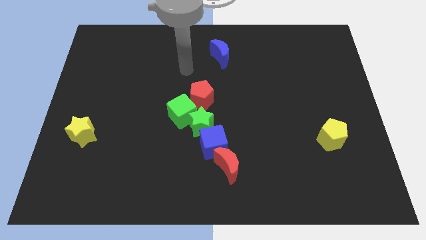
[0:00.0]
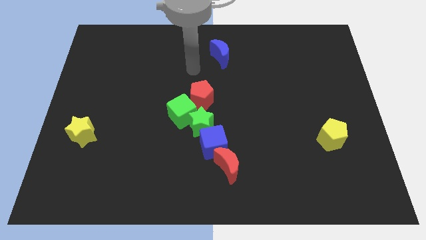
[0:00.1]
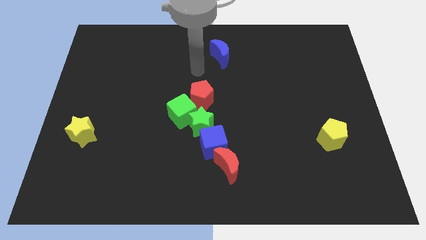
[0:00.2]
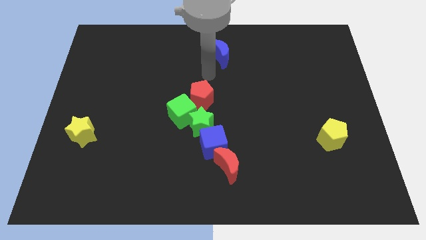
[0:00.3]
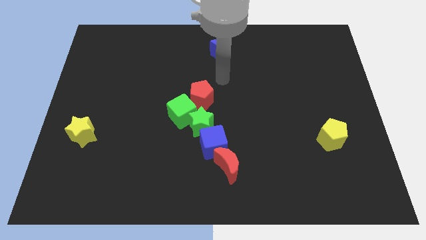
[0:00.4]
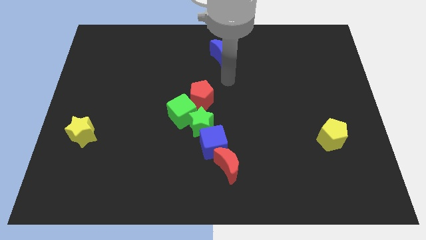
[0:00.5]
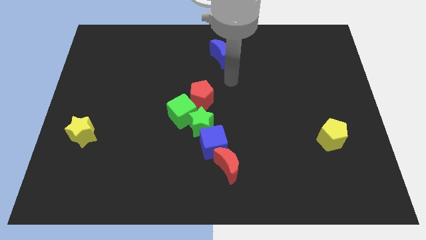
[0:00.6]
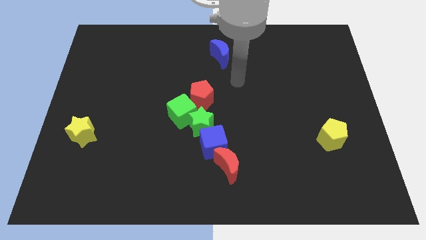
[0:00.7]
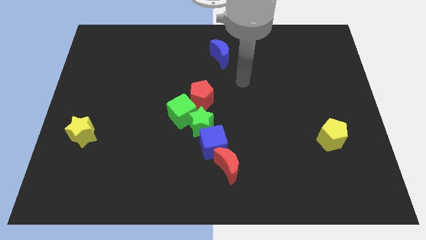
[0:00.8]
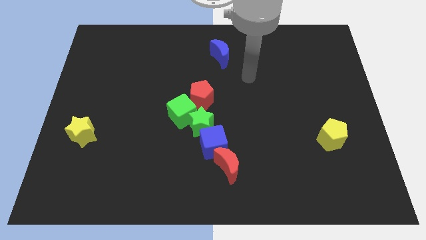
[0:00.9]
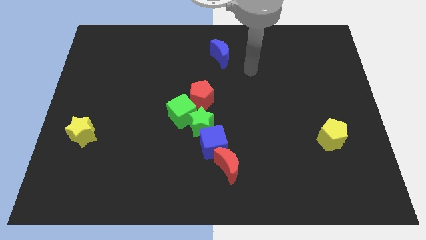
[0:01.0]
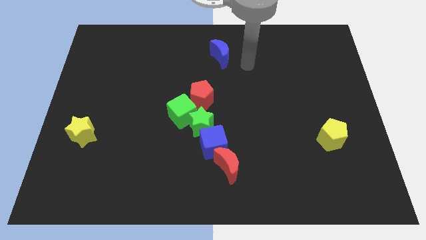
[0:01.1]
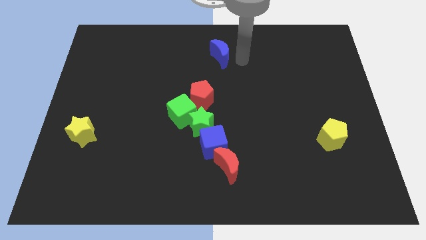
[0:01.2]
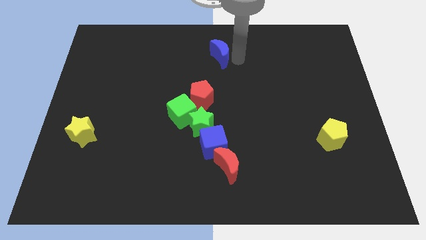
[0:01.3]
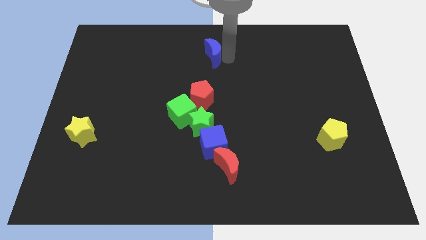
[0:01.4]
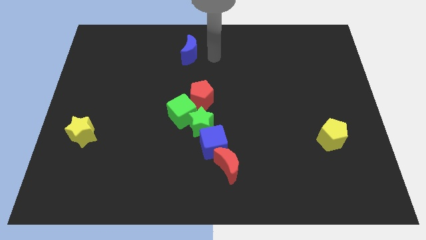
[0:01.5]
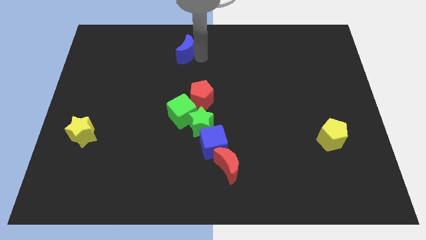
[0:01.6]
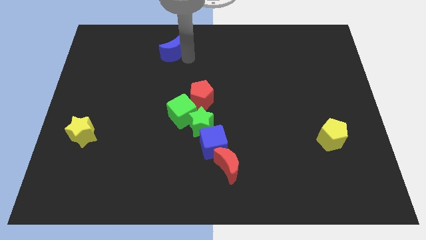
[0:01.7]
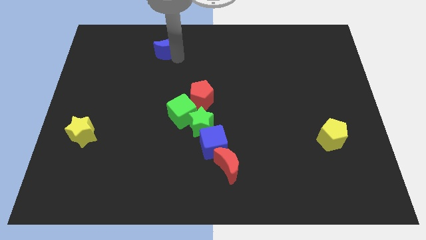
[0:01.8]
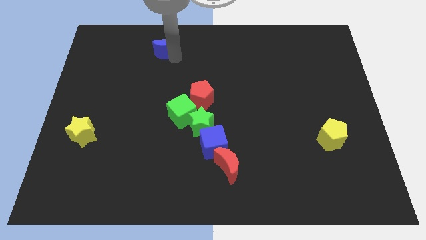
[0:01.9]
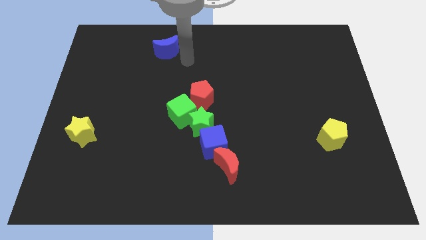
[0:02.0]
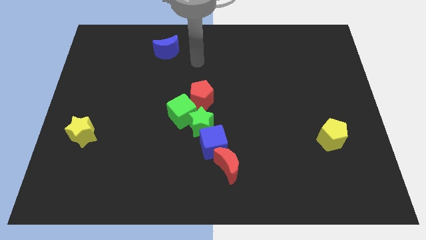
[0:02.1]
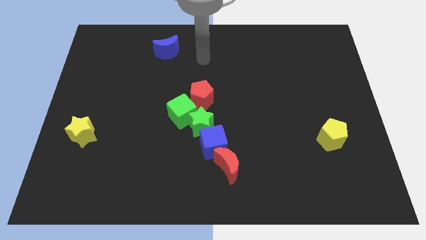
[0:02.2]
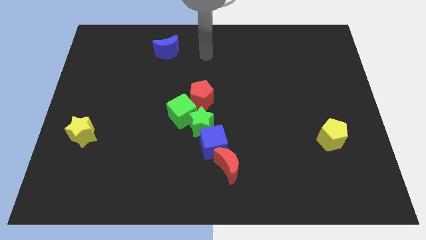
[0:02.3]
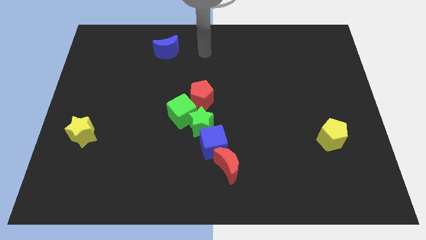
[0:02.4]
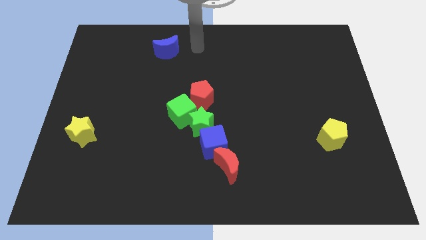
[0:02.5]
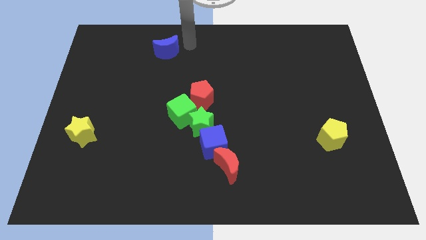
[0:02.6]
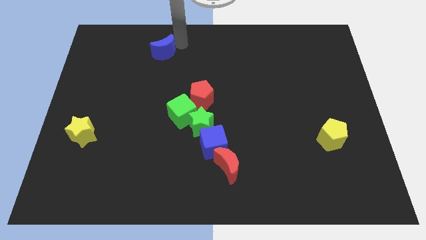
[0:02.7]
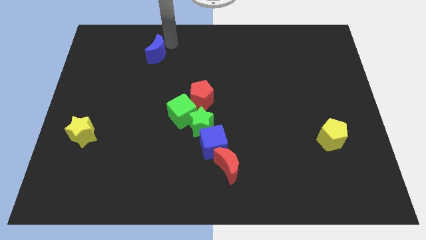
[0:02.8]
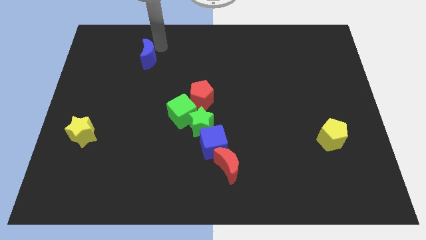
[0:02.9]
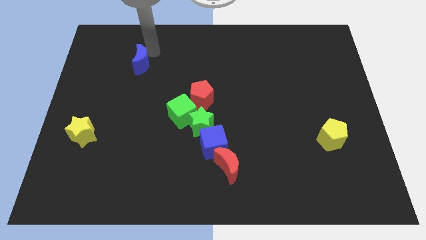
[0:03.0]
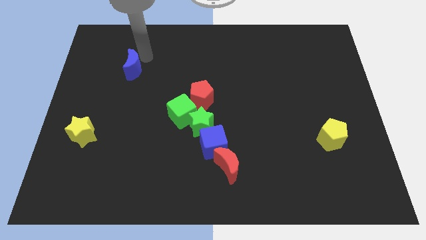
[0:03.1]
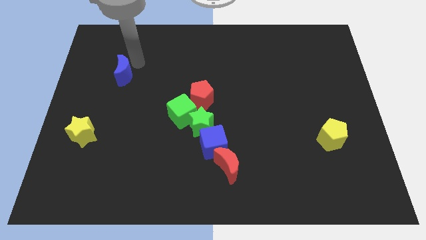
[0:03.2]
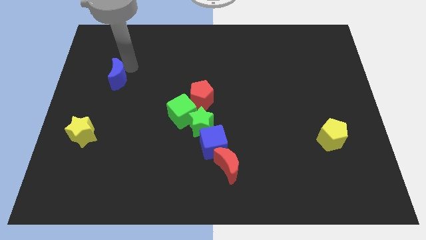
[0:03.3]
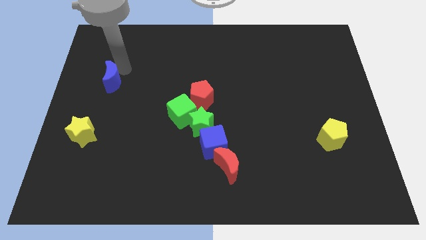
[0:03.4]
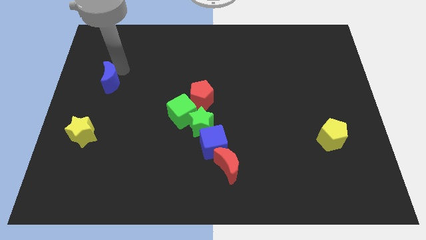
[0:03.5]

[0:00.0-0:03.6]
drag the blue moon towards the left side of the board

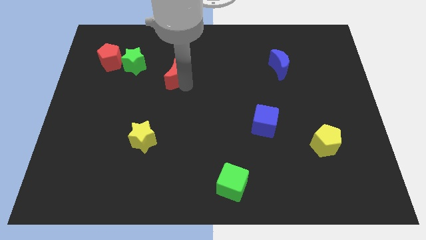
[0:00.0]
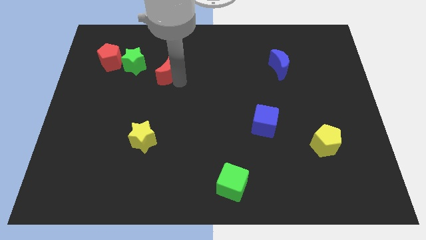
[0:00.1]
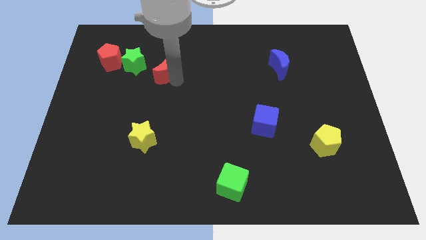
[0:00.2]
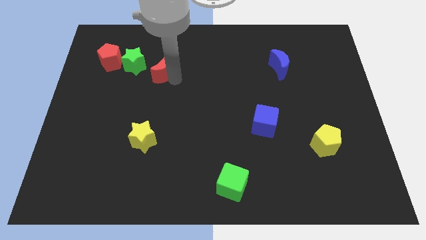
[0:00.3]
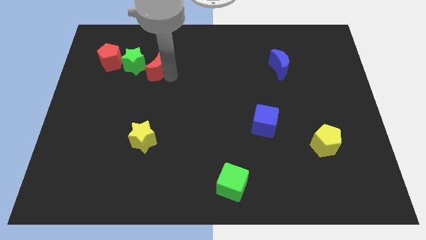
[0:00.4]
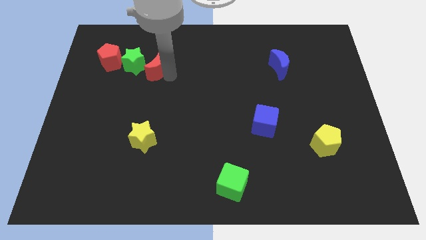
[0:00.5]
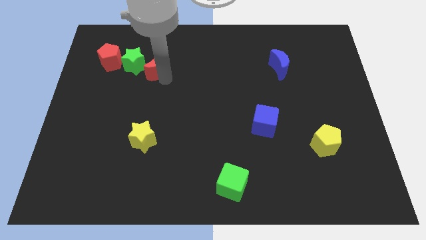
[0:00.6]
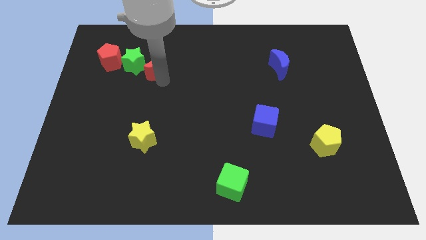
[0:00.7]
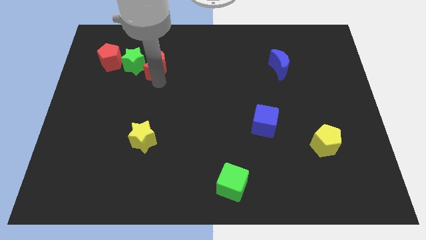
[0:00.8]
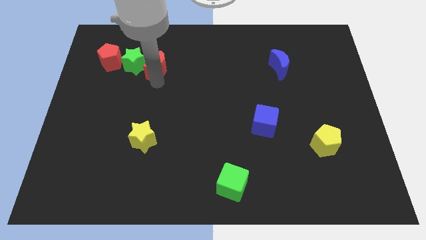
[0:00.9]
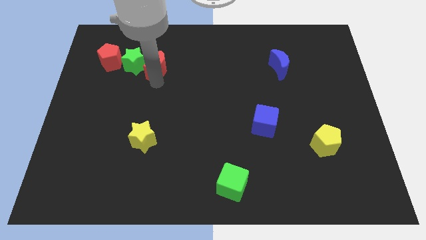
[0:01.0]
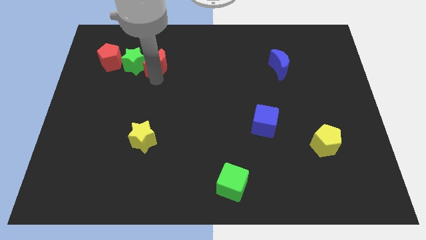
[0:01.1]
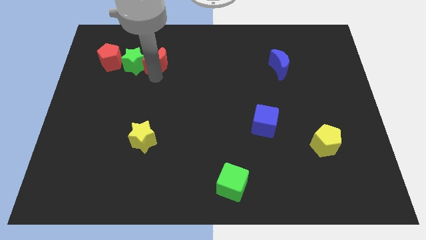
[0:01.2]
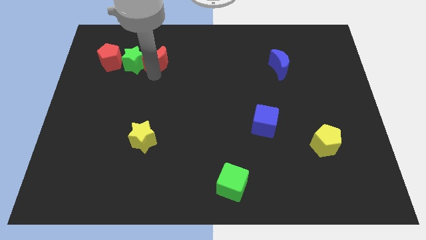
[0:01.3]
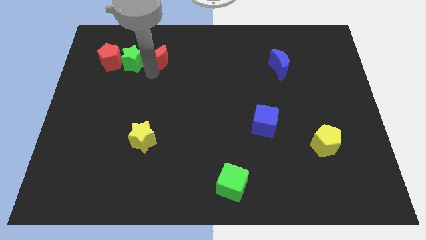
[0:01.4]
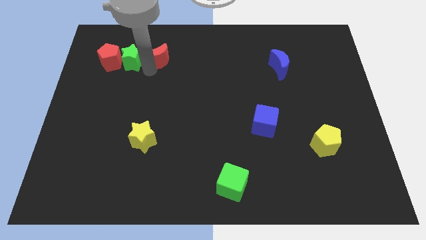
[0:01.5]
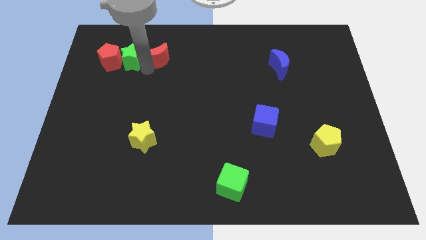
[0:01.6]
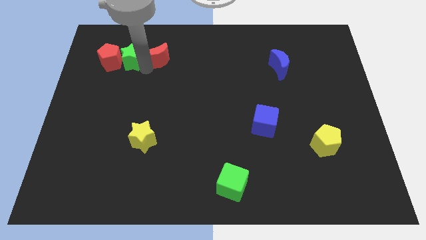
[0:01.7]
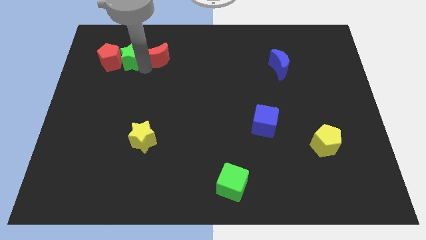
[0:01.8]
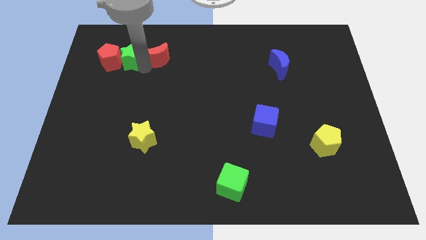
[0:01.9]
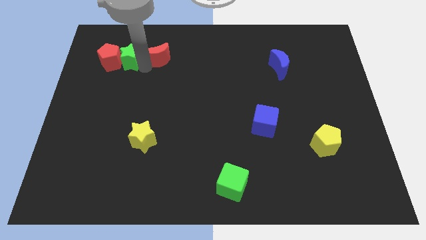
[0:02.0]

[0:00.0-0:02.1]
push the red moon into the green star

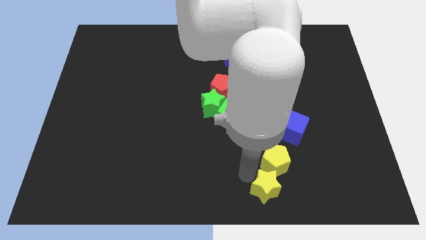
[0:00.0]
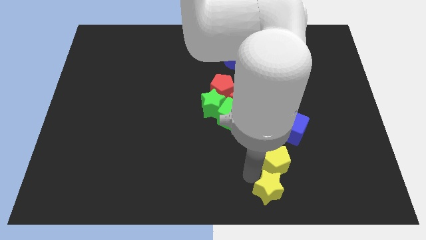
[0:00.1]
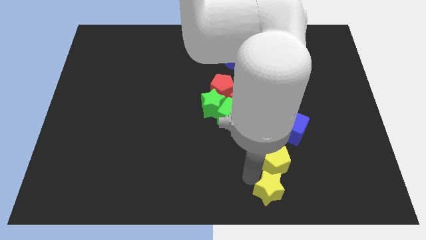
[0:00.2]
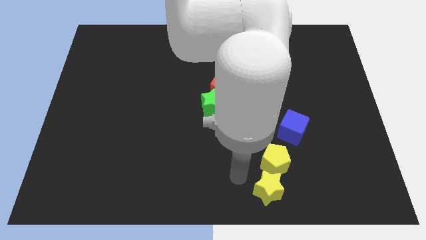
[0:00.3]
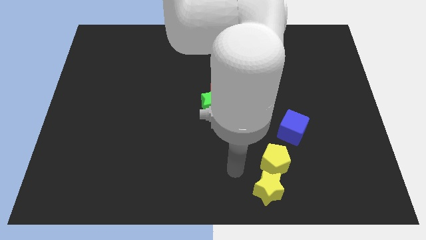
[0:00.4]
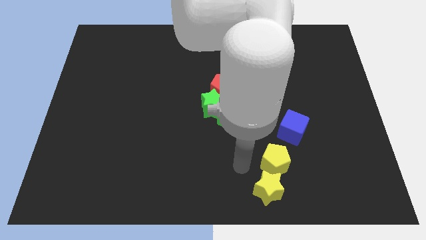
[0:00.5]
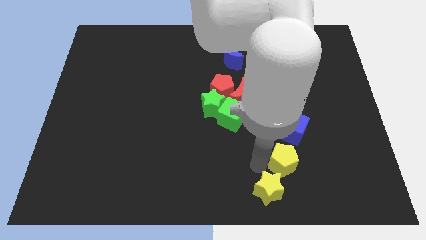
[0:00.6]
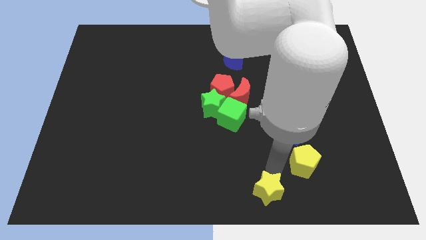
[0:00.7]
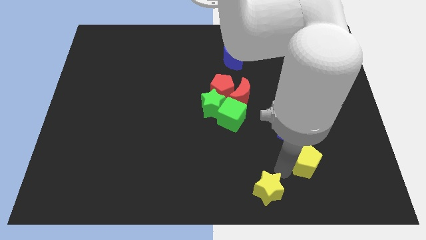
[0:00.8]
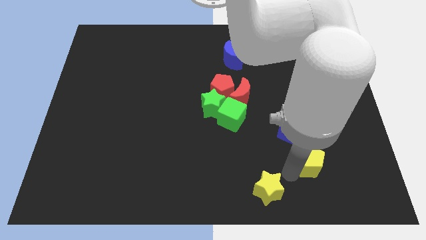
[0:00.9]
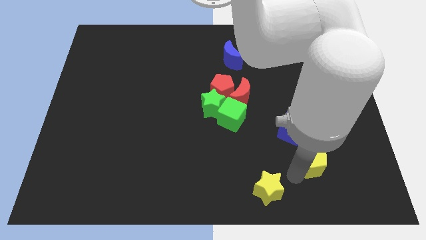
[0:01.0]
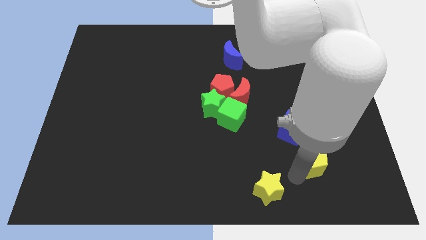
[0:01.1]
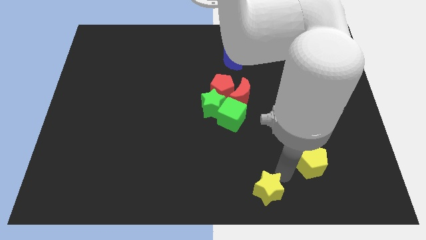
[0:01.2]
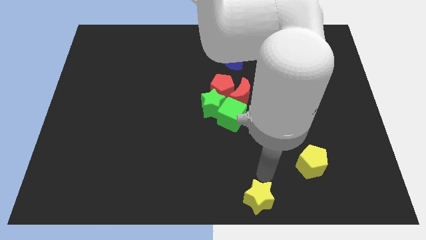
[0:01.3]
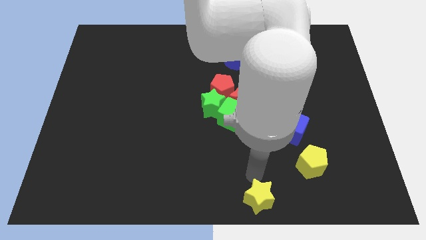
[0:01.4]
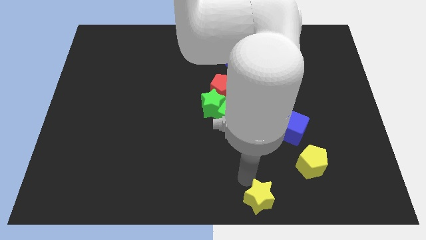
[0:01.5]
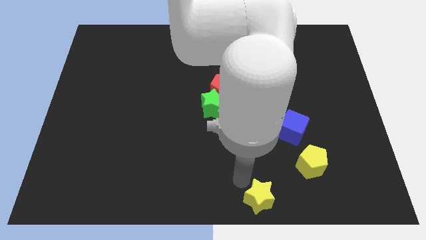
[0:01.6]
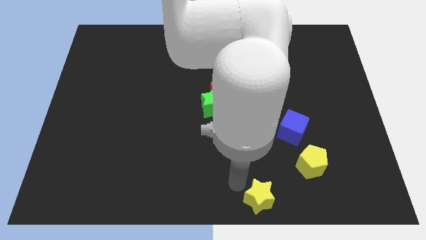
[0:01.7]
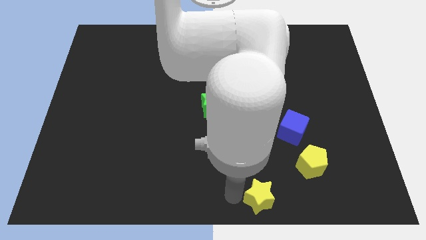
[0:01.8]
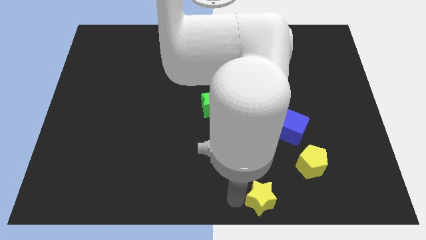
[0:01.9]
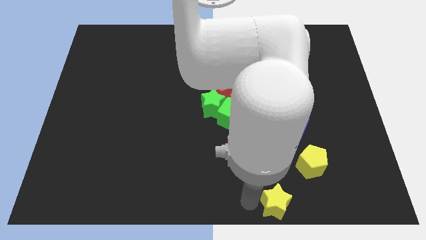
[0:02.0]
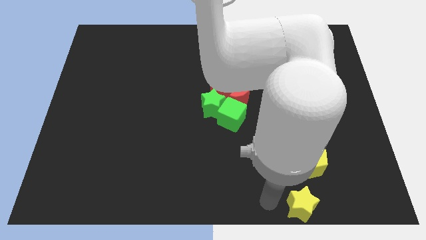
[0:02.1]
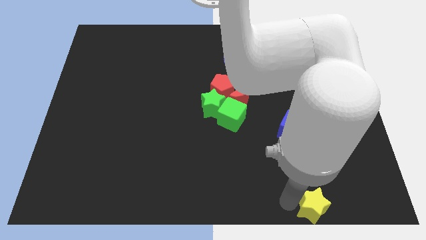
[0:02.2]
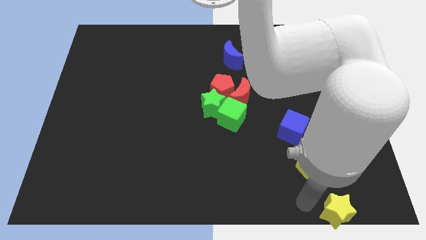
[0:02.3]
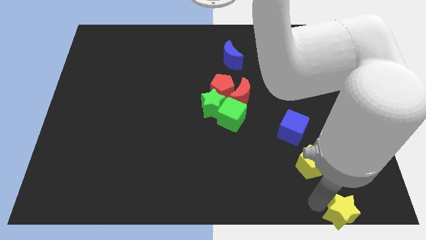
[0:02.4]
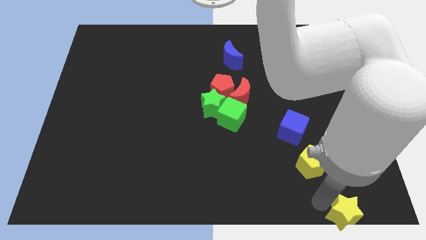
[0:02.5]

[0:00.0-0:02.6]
separate the yellow pentagon from the yellow star

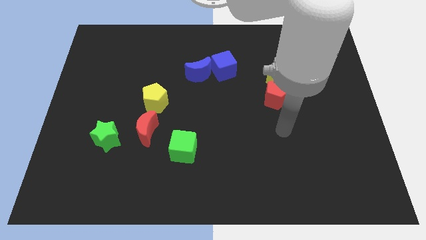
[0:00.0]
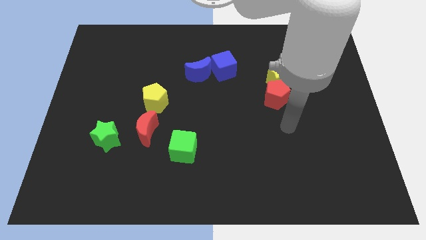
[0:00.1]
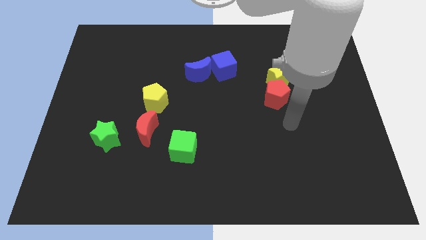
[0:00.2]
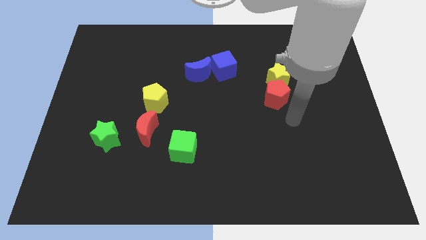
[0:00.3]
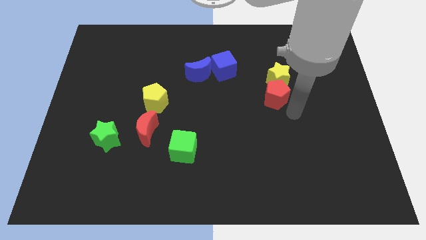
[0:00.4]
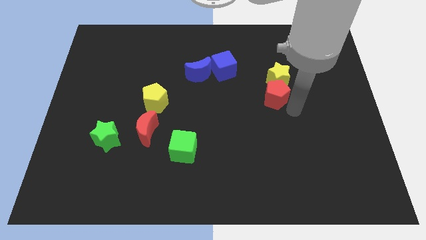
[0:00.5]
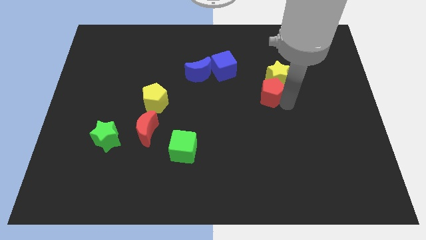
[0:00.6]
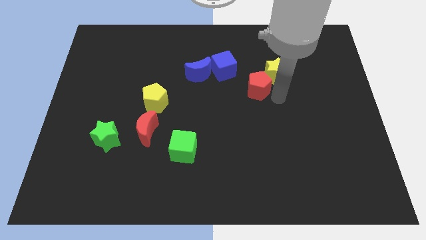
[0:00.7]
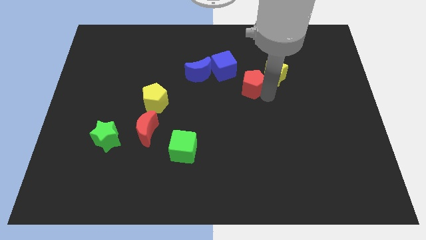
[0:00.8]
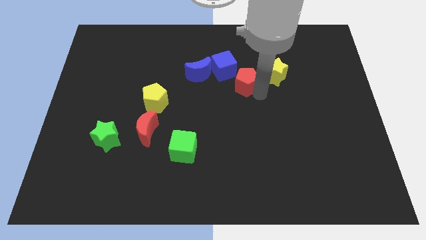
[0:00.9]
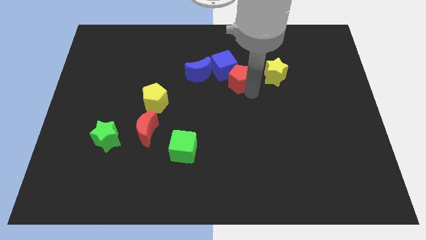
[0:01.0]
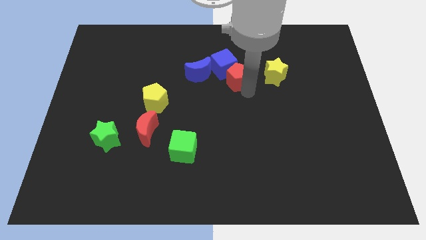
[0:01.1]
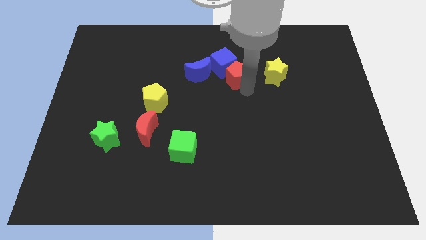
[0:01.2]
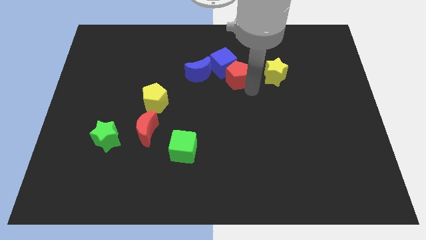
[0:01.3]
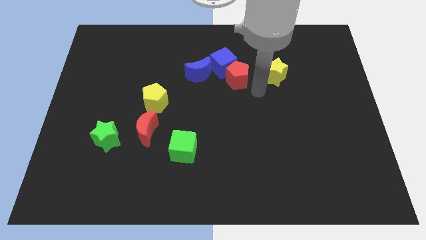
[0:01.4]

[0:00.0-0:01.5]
separate the red pentagon and yellow star
